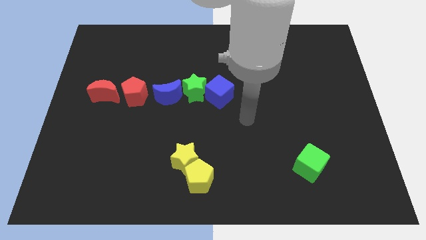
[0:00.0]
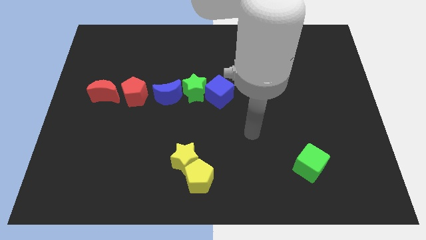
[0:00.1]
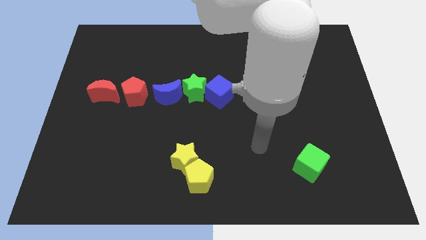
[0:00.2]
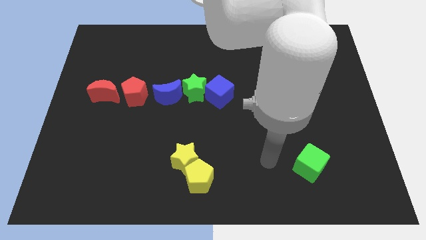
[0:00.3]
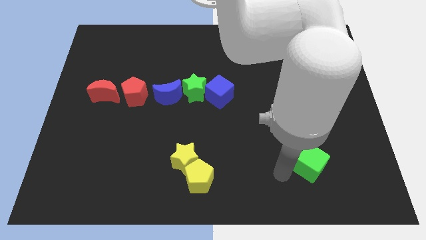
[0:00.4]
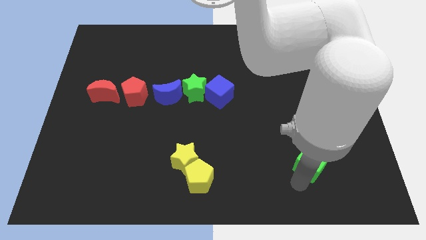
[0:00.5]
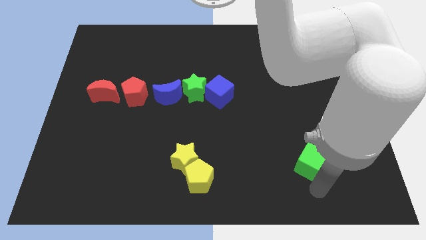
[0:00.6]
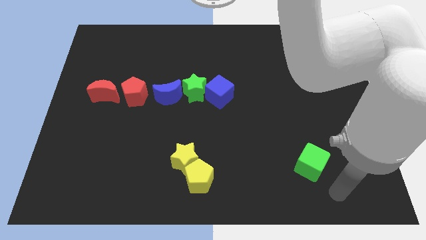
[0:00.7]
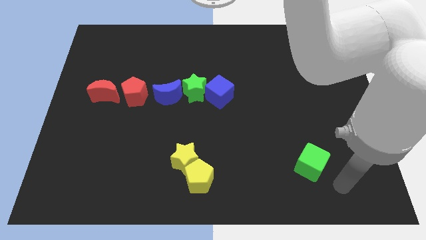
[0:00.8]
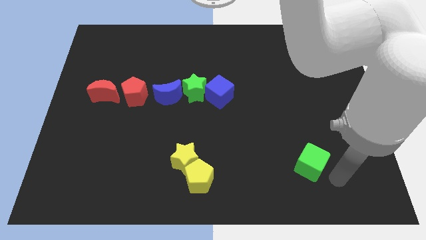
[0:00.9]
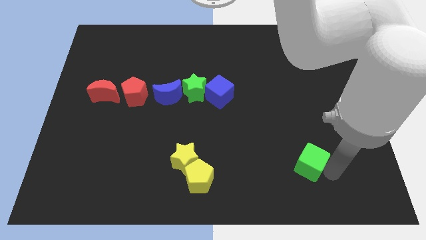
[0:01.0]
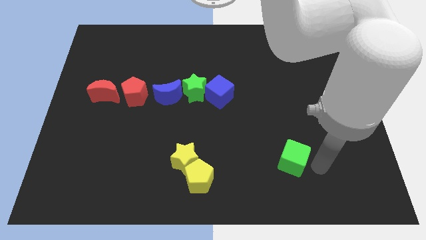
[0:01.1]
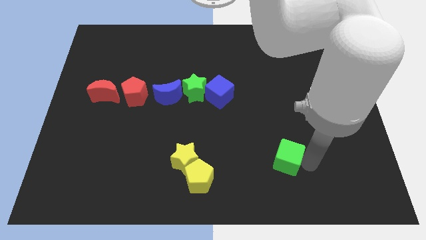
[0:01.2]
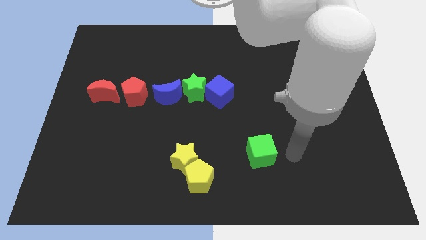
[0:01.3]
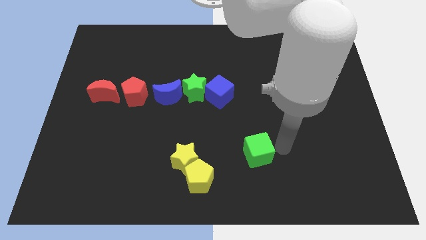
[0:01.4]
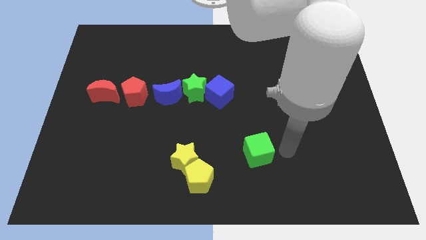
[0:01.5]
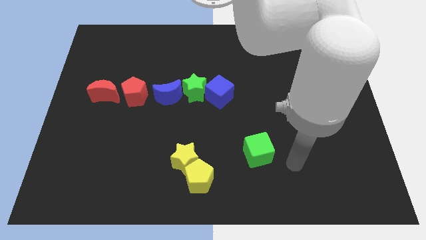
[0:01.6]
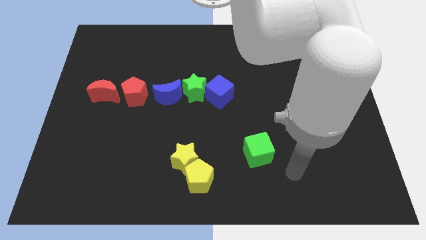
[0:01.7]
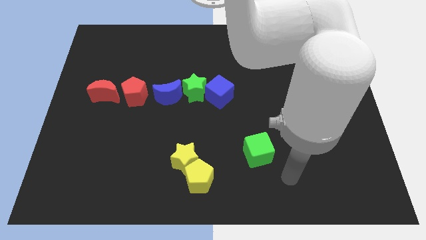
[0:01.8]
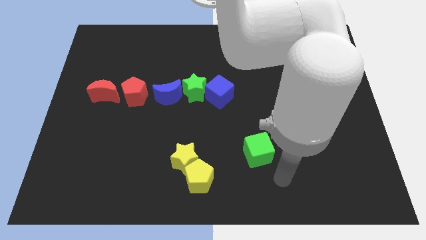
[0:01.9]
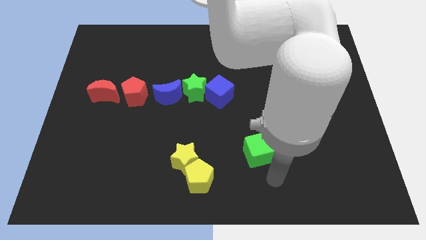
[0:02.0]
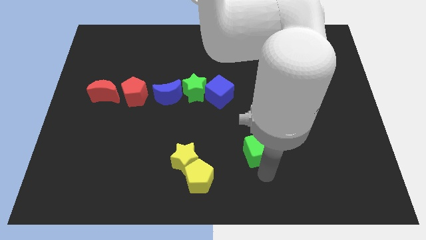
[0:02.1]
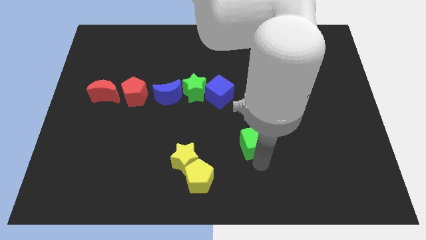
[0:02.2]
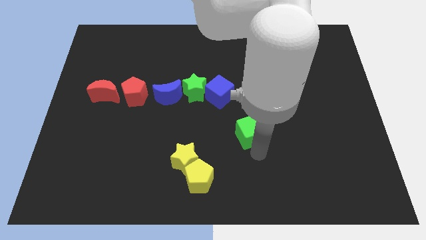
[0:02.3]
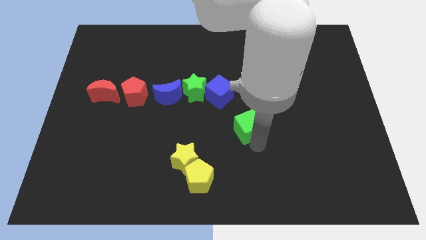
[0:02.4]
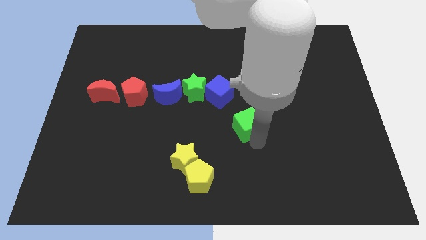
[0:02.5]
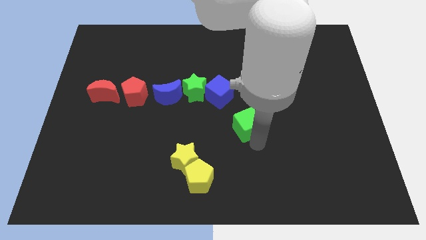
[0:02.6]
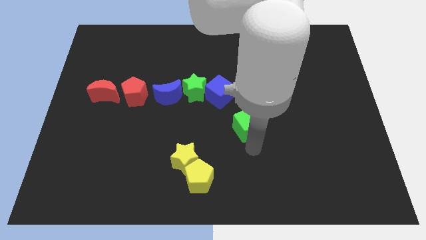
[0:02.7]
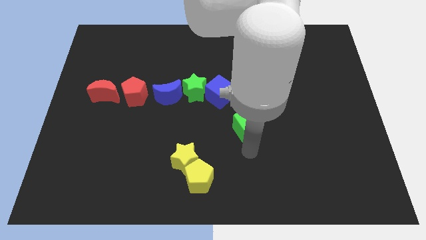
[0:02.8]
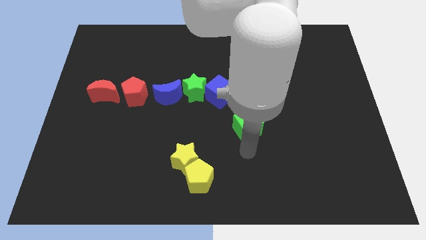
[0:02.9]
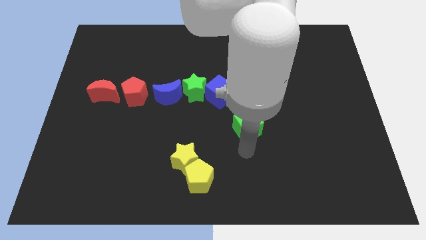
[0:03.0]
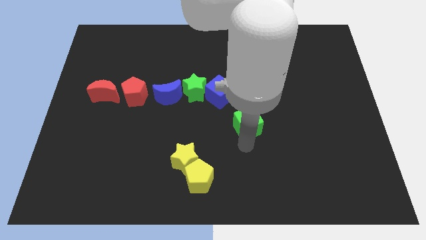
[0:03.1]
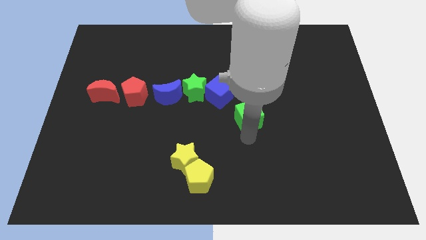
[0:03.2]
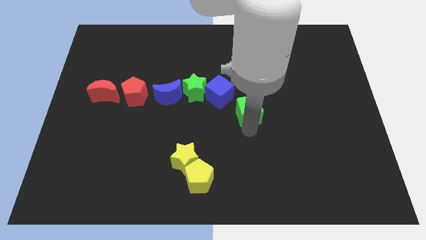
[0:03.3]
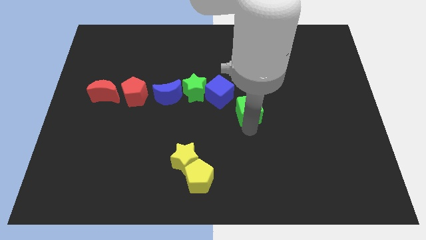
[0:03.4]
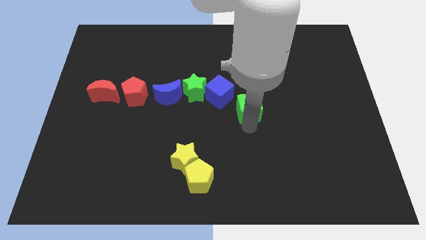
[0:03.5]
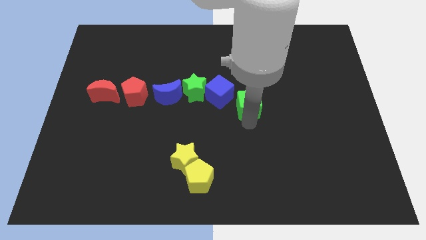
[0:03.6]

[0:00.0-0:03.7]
push green cube to the right of the blue cube

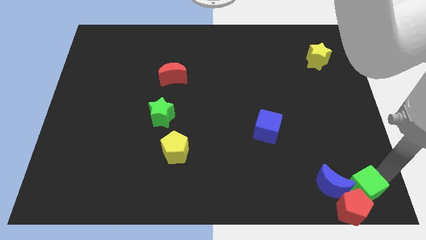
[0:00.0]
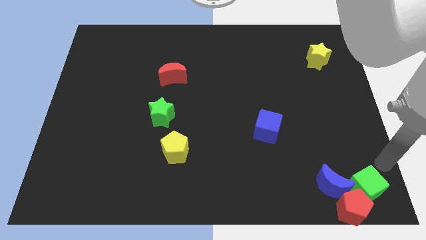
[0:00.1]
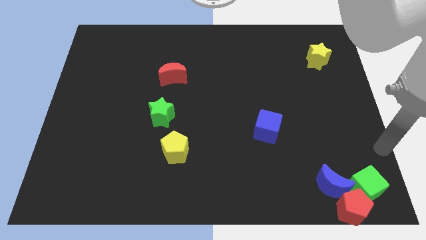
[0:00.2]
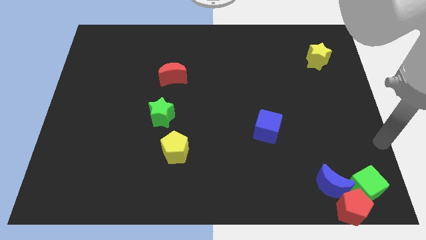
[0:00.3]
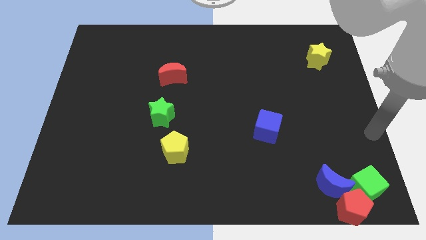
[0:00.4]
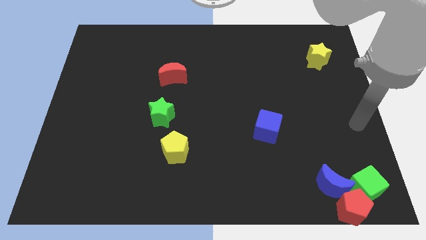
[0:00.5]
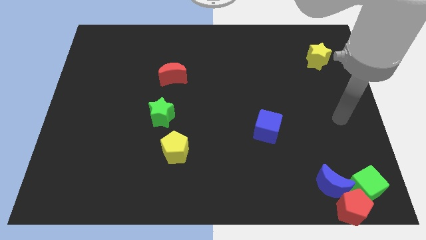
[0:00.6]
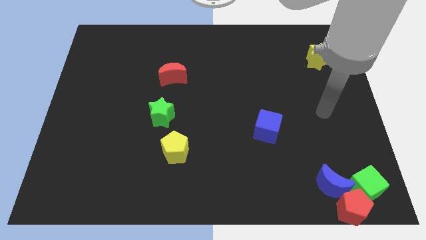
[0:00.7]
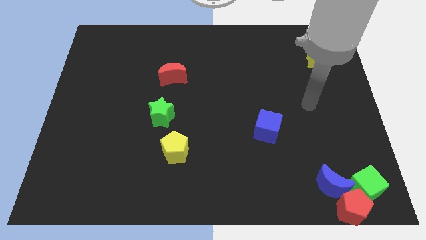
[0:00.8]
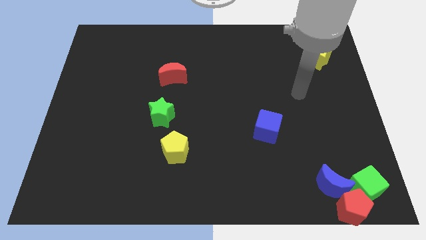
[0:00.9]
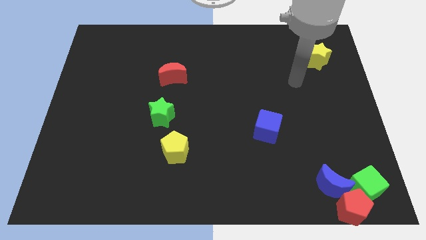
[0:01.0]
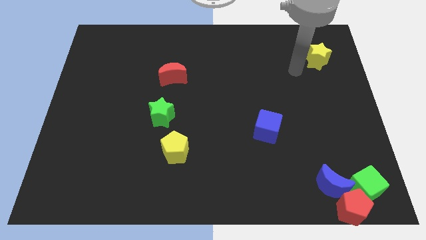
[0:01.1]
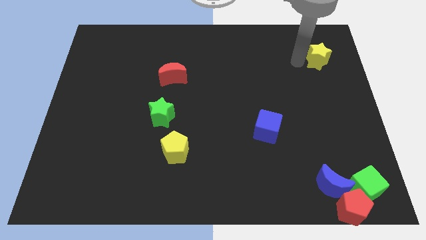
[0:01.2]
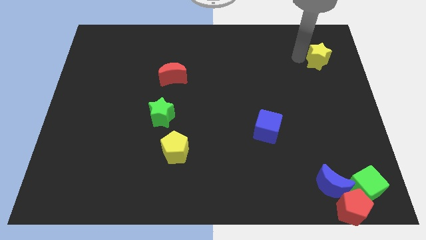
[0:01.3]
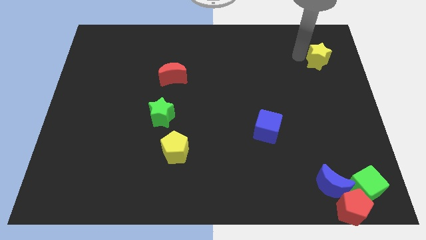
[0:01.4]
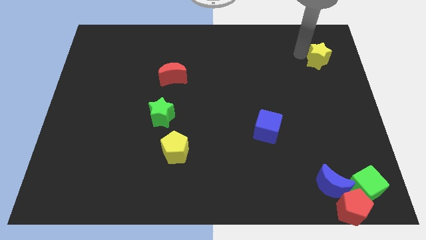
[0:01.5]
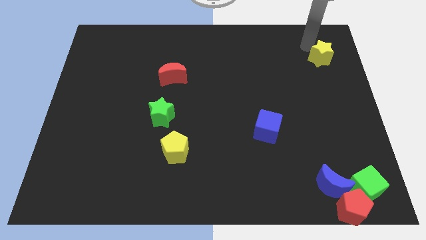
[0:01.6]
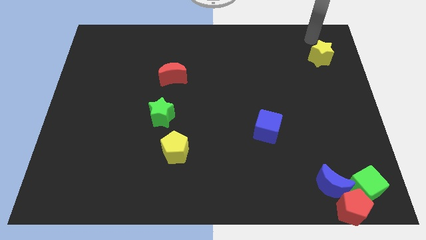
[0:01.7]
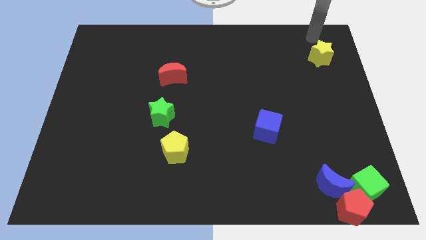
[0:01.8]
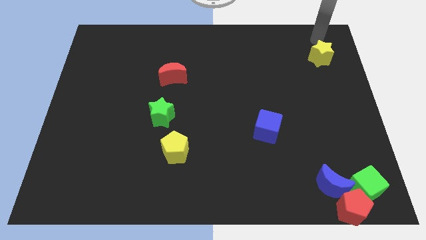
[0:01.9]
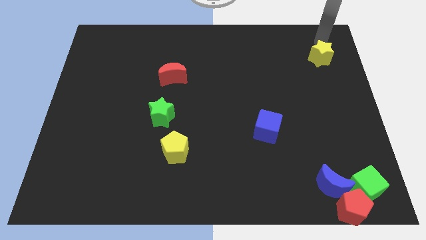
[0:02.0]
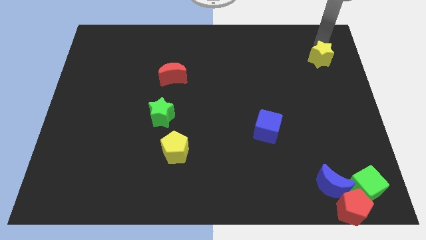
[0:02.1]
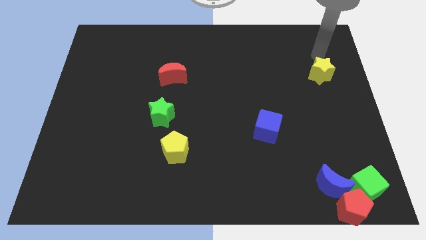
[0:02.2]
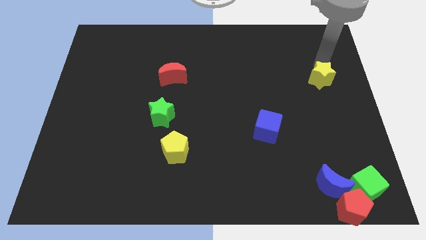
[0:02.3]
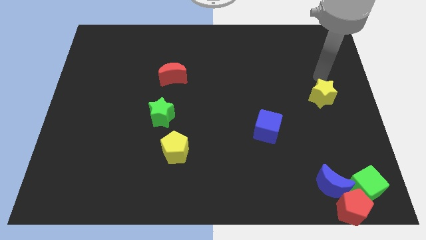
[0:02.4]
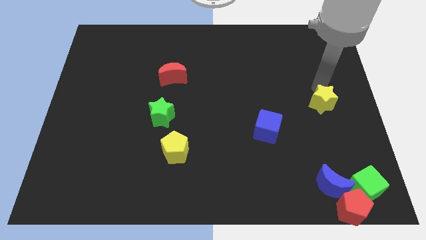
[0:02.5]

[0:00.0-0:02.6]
slightly push the yellow star diagnol to the blue cube at right center

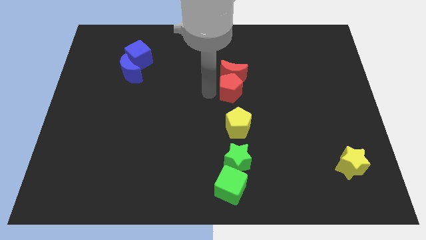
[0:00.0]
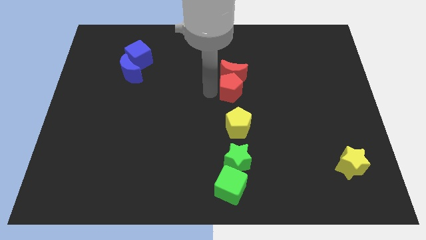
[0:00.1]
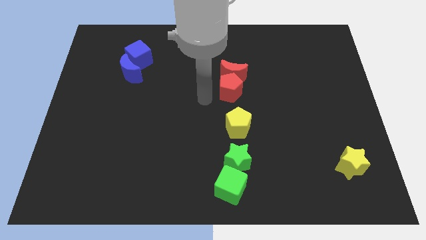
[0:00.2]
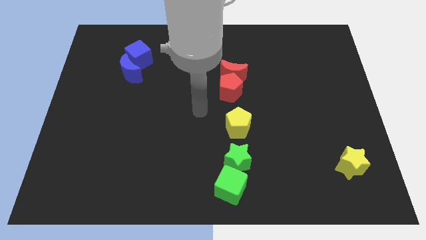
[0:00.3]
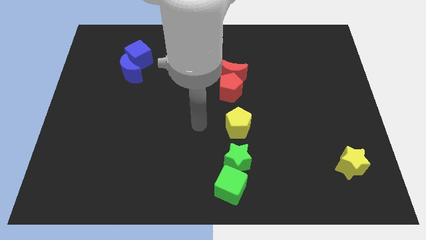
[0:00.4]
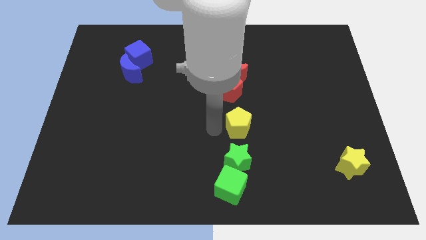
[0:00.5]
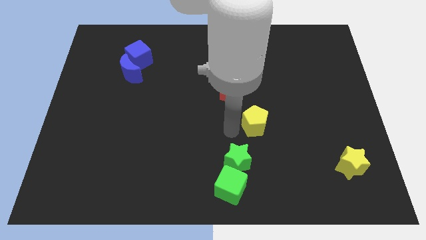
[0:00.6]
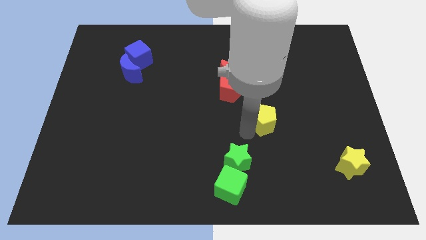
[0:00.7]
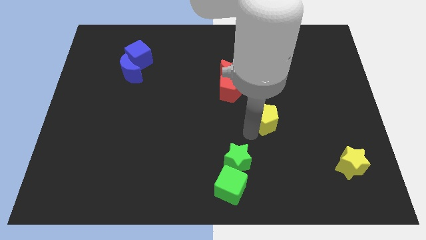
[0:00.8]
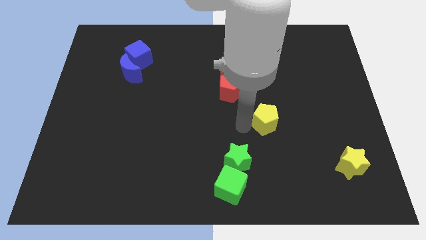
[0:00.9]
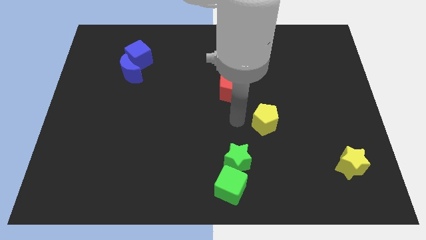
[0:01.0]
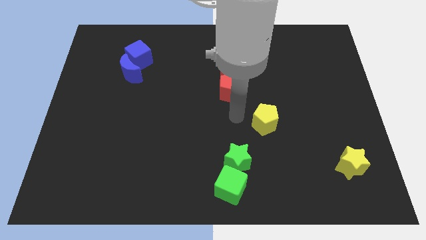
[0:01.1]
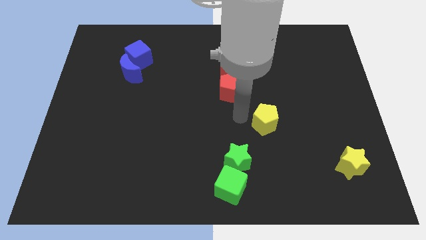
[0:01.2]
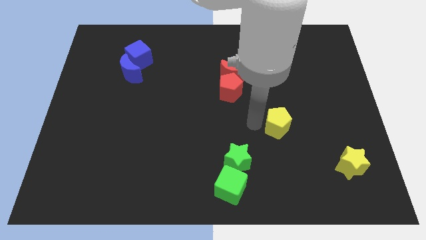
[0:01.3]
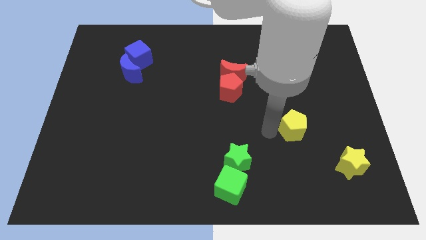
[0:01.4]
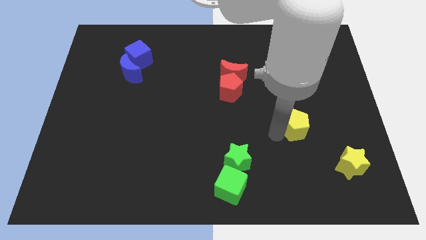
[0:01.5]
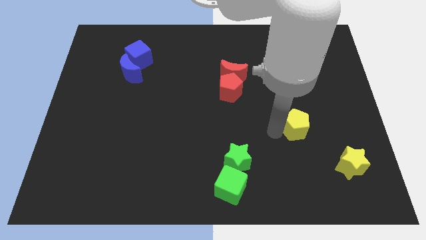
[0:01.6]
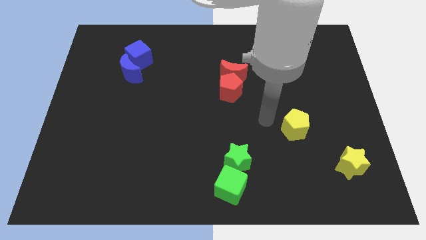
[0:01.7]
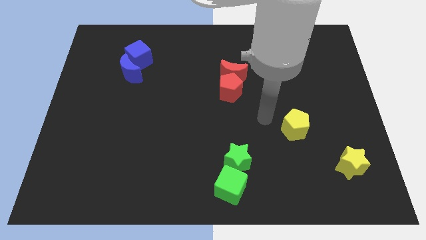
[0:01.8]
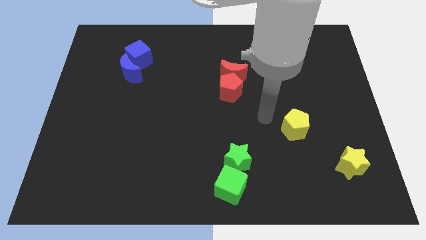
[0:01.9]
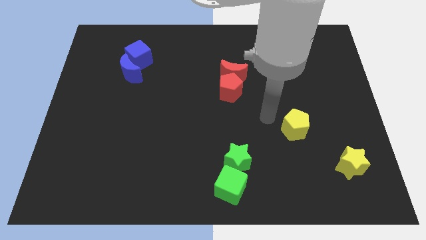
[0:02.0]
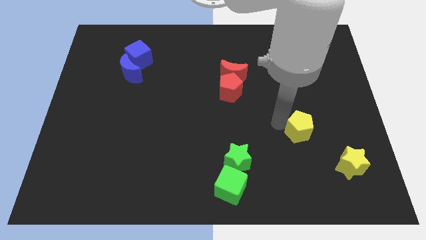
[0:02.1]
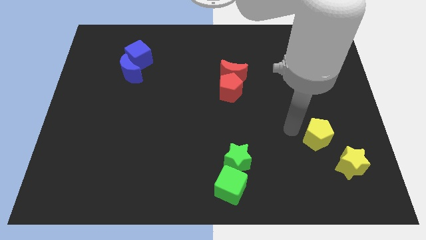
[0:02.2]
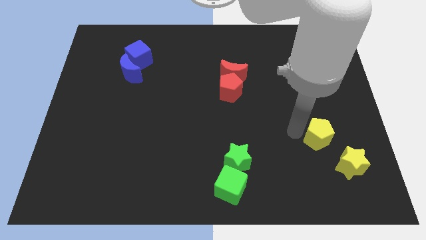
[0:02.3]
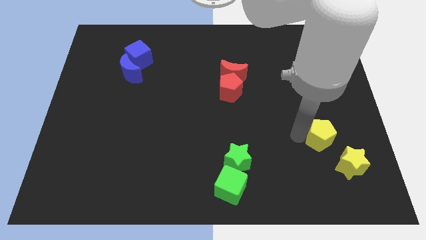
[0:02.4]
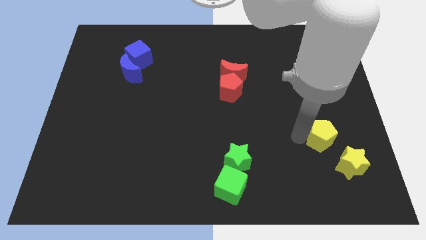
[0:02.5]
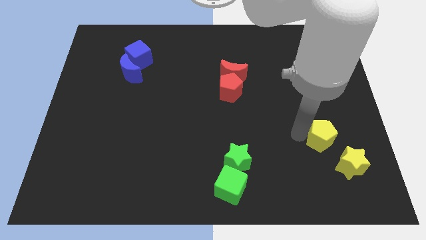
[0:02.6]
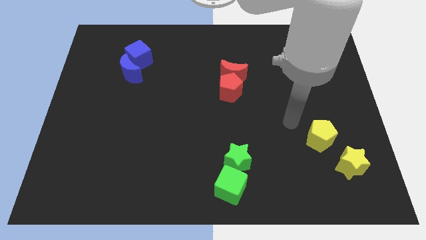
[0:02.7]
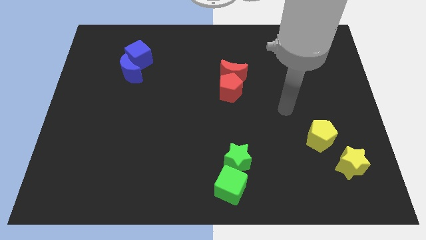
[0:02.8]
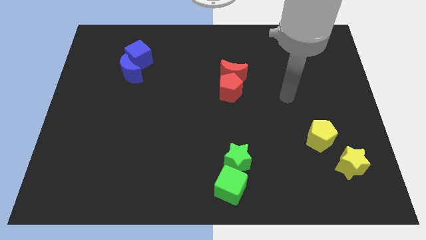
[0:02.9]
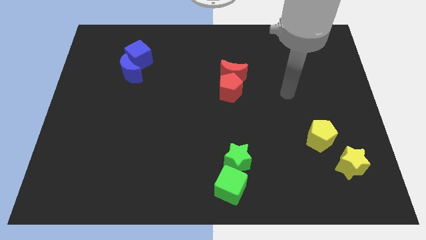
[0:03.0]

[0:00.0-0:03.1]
move the yellow pentagon to the top left of the yellow star
